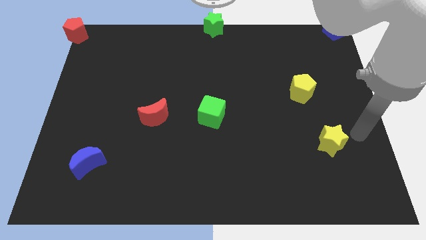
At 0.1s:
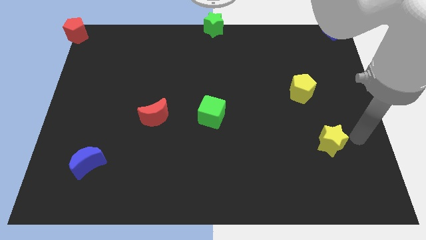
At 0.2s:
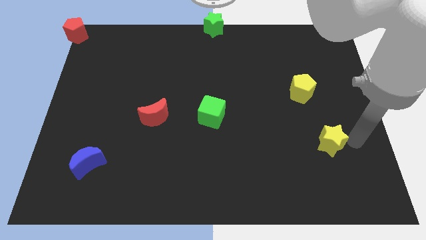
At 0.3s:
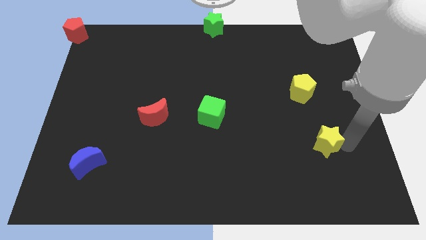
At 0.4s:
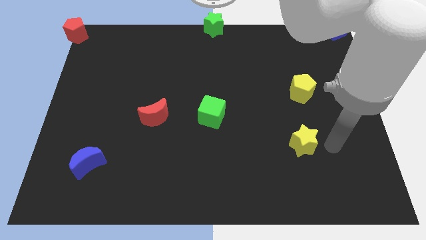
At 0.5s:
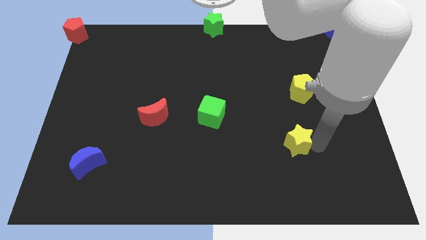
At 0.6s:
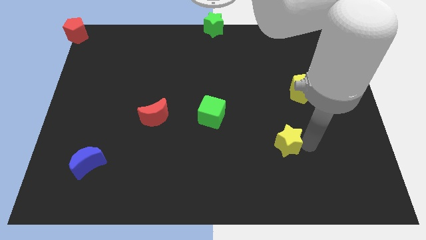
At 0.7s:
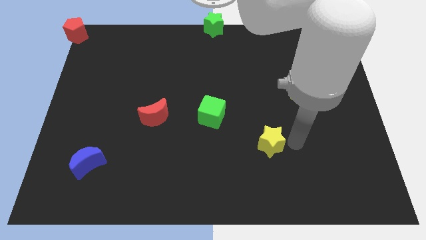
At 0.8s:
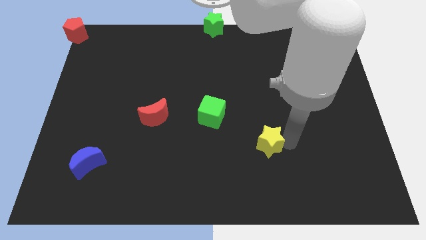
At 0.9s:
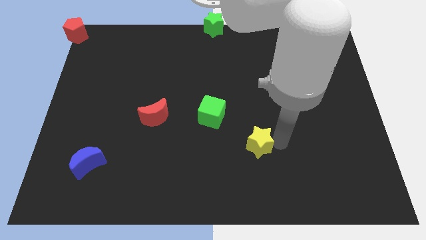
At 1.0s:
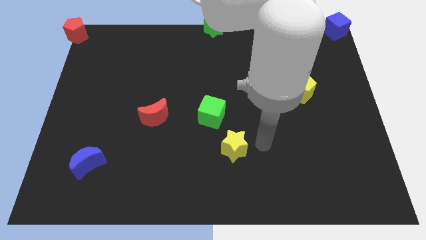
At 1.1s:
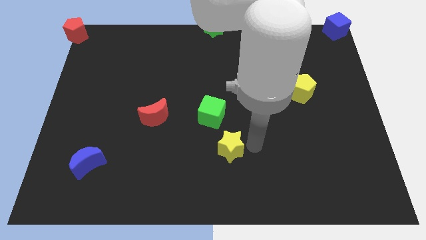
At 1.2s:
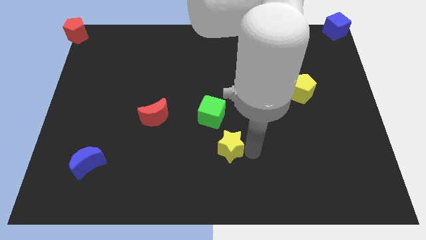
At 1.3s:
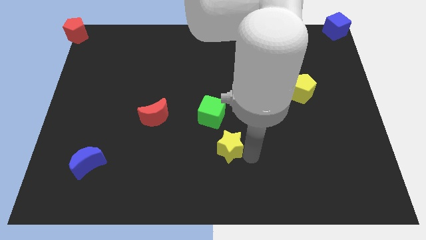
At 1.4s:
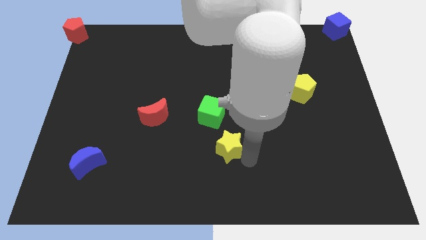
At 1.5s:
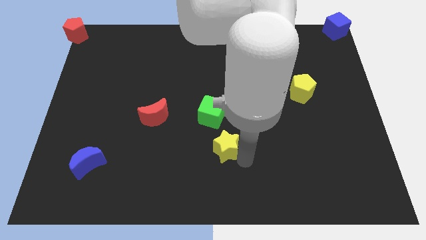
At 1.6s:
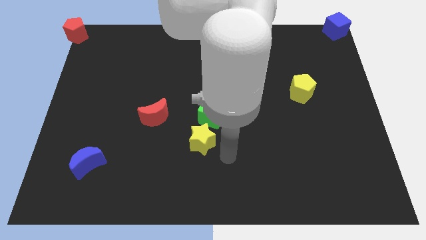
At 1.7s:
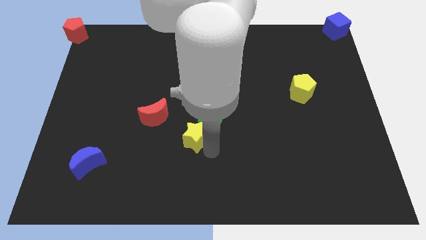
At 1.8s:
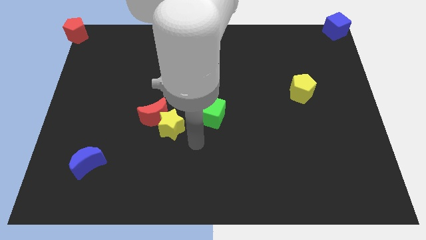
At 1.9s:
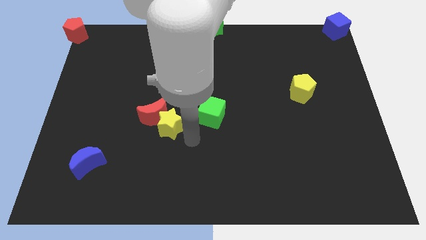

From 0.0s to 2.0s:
put the yellow star into the red moon

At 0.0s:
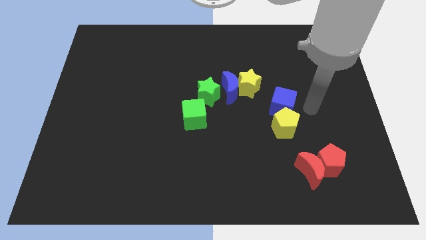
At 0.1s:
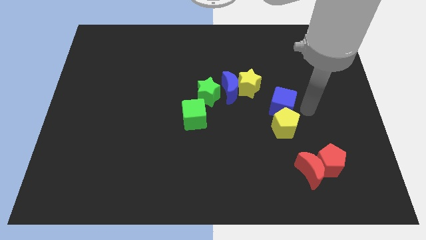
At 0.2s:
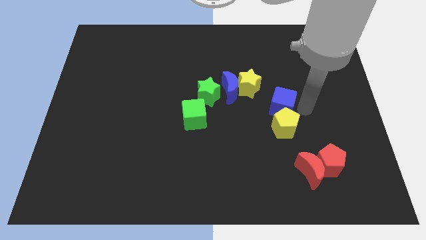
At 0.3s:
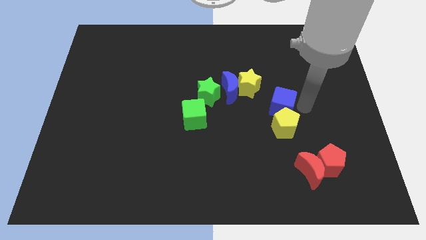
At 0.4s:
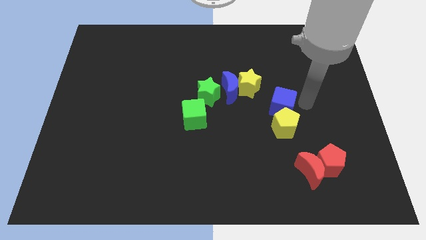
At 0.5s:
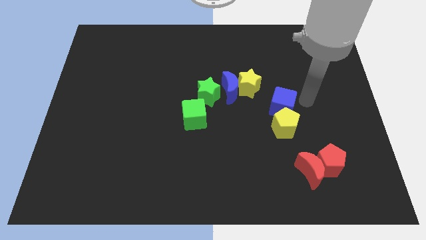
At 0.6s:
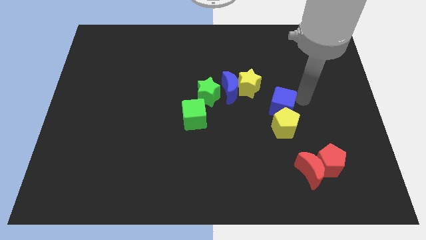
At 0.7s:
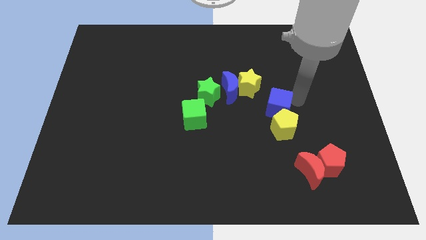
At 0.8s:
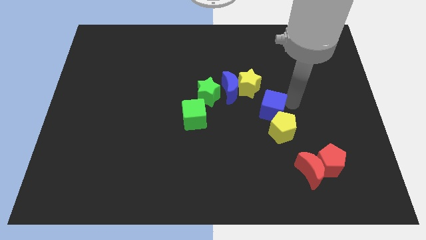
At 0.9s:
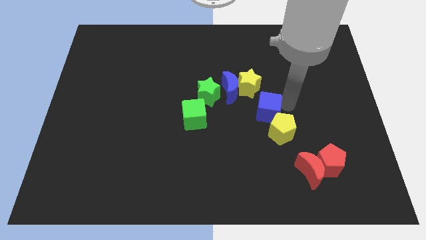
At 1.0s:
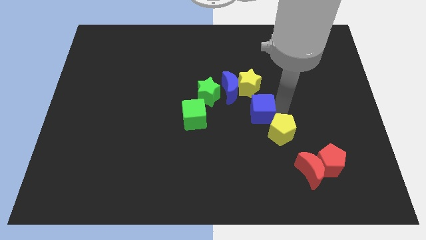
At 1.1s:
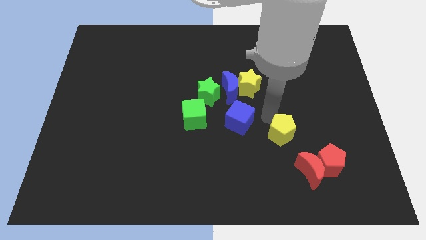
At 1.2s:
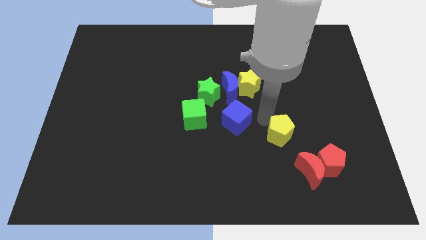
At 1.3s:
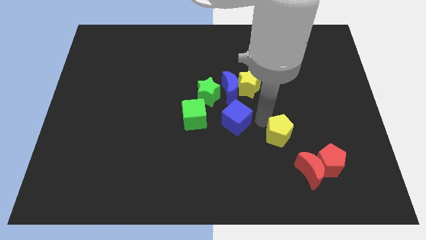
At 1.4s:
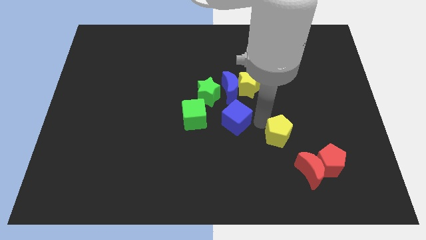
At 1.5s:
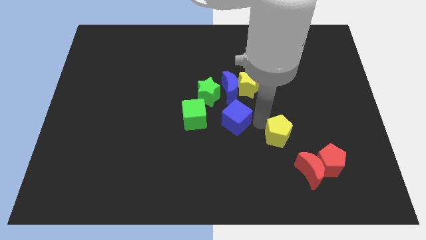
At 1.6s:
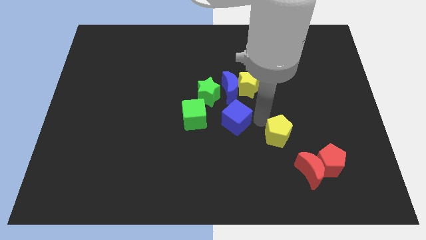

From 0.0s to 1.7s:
place the yellow pentagon at the top of the red moon

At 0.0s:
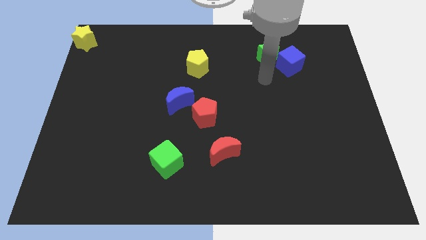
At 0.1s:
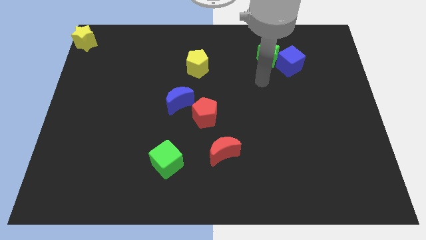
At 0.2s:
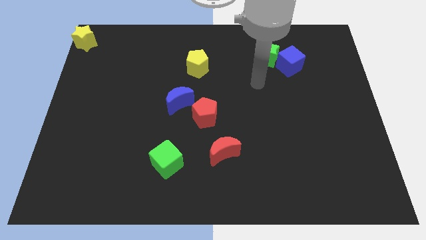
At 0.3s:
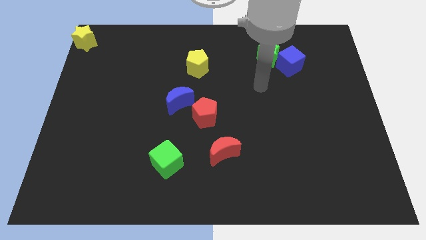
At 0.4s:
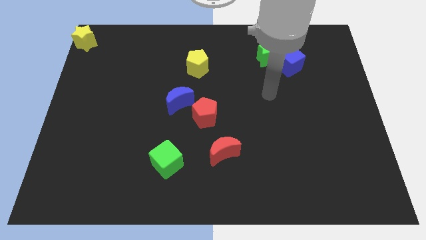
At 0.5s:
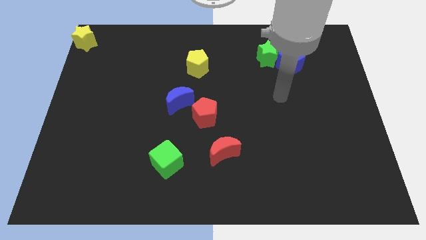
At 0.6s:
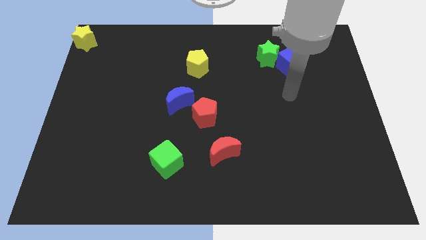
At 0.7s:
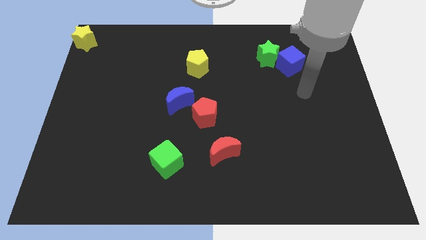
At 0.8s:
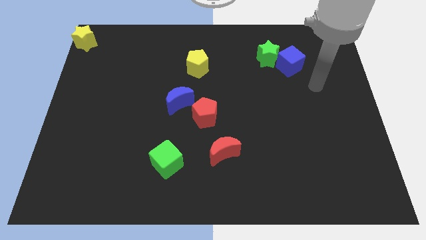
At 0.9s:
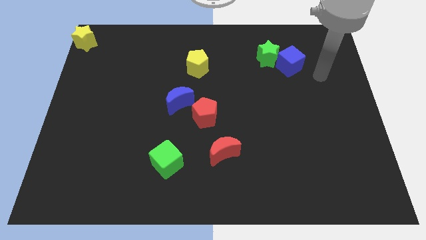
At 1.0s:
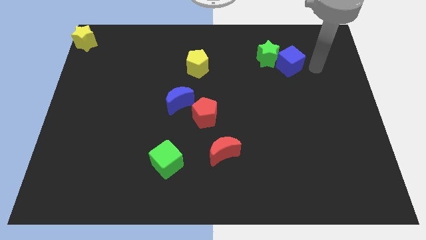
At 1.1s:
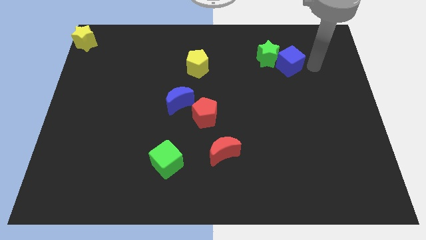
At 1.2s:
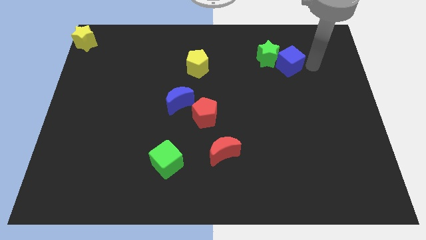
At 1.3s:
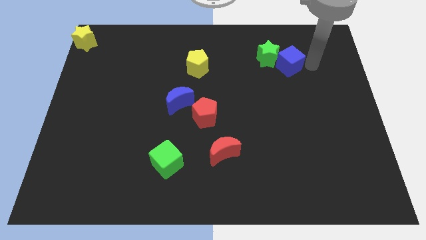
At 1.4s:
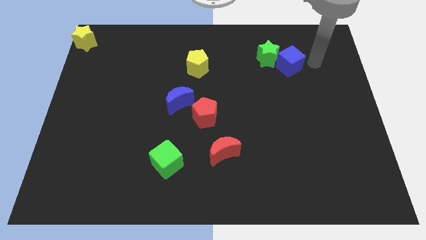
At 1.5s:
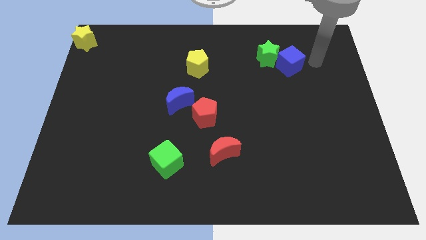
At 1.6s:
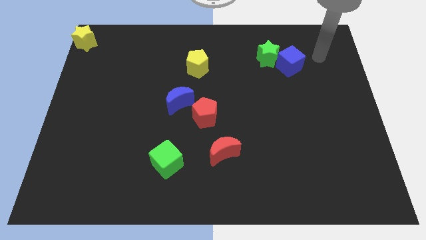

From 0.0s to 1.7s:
point your hand at the right of the blue cube

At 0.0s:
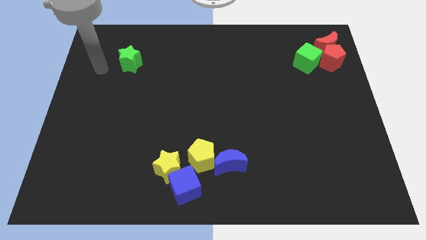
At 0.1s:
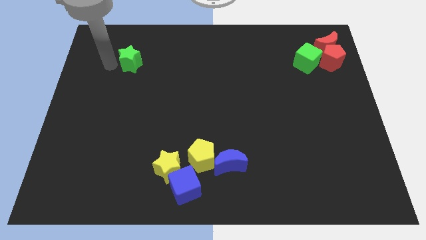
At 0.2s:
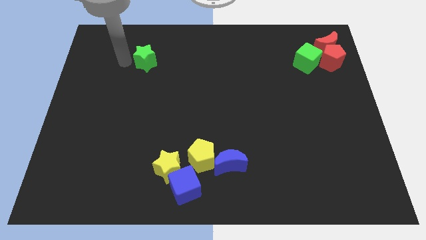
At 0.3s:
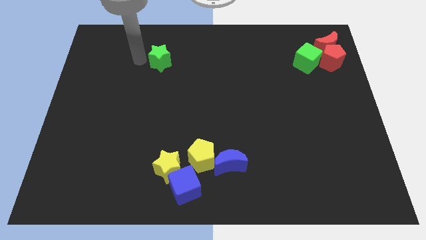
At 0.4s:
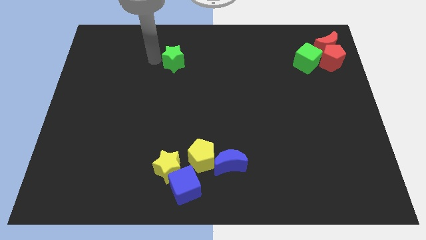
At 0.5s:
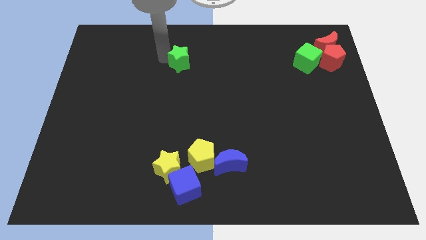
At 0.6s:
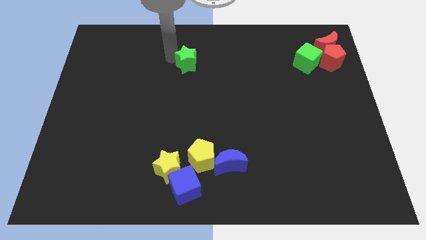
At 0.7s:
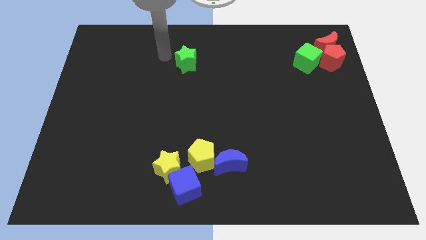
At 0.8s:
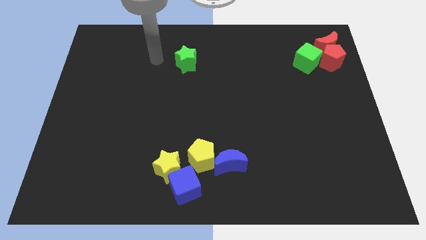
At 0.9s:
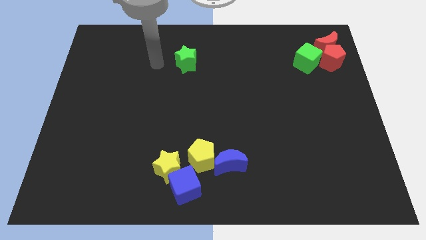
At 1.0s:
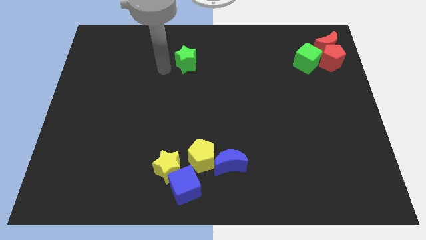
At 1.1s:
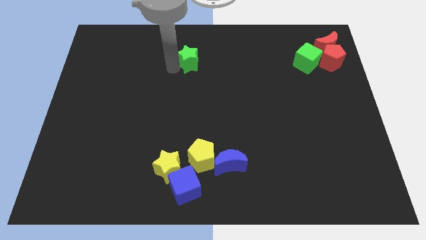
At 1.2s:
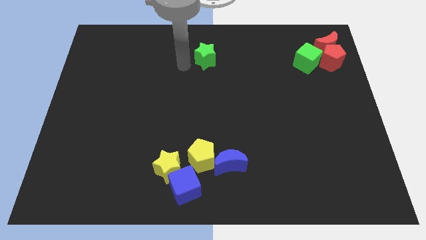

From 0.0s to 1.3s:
put the green star vertically above the yellow pentagon

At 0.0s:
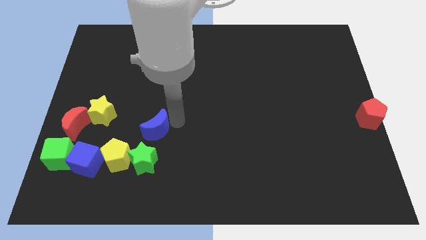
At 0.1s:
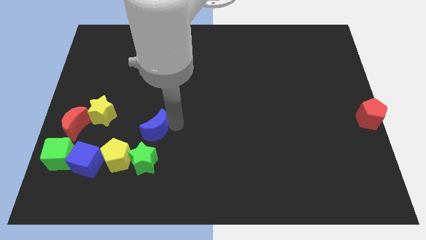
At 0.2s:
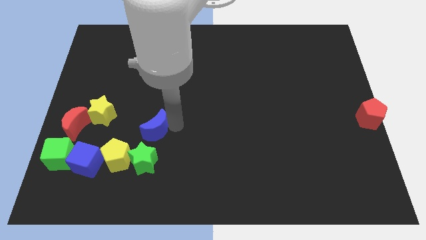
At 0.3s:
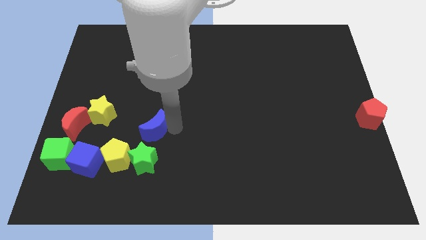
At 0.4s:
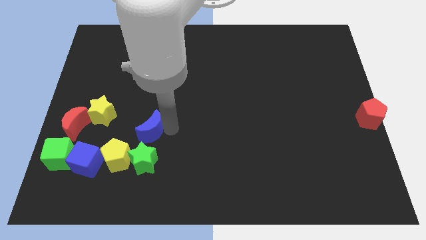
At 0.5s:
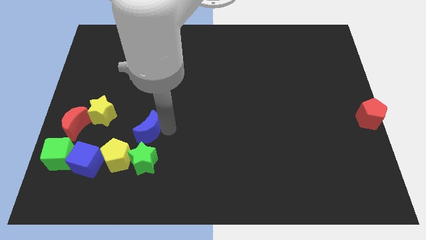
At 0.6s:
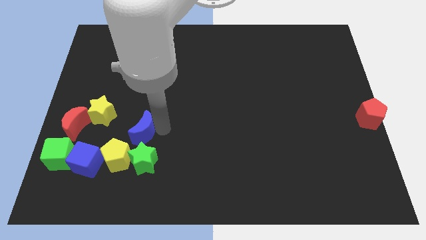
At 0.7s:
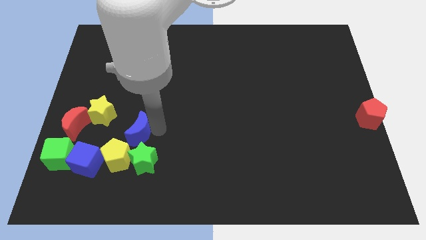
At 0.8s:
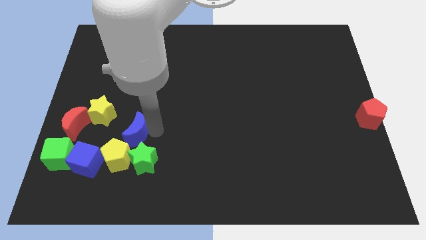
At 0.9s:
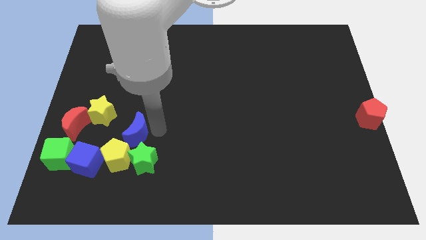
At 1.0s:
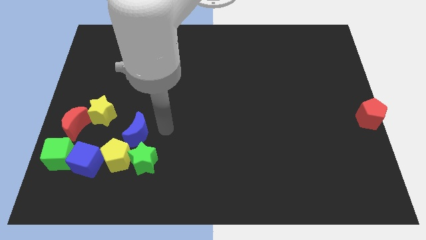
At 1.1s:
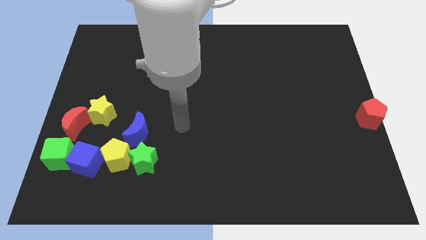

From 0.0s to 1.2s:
place the blue moon above the yellow pentagon

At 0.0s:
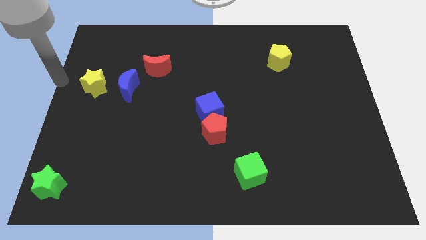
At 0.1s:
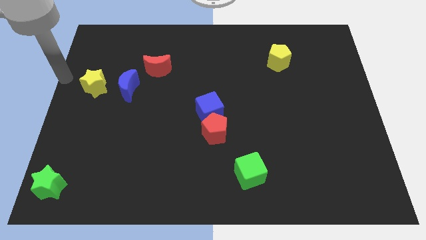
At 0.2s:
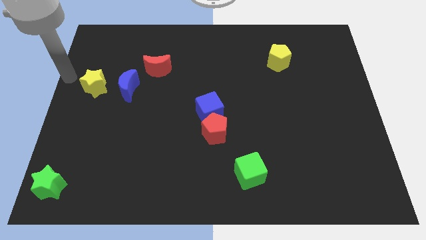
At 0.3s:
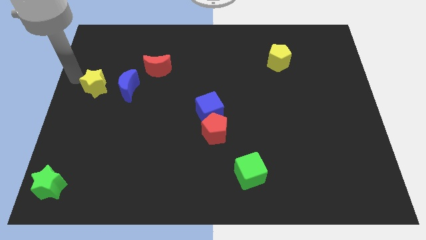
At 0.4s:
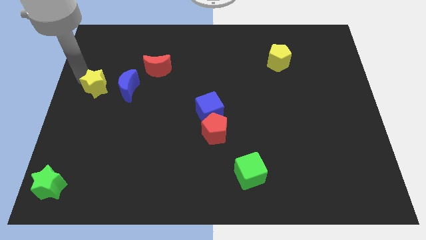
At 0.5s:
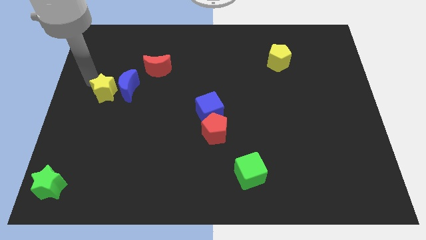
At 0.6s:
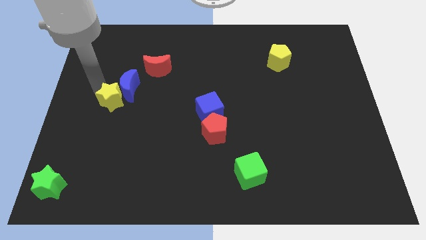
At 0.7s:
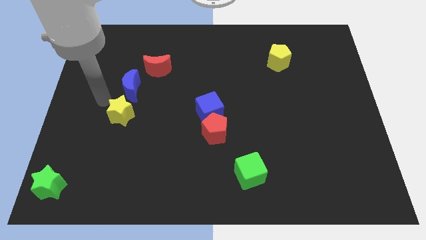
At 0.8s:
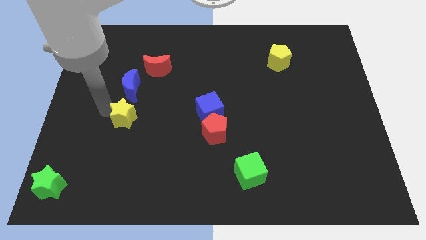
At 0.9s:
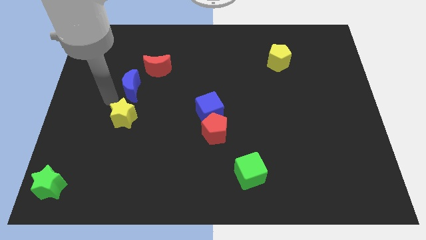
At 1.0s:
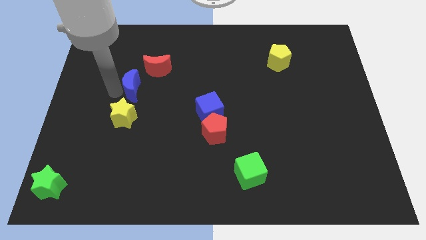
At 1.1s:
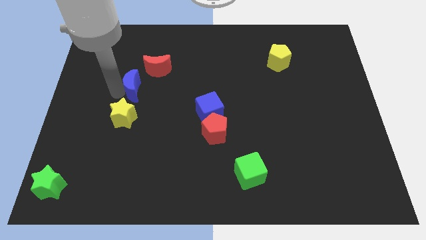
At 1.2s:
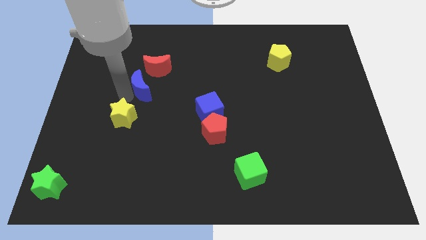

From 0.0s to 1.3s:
place the yellow star below the bue moon
